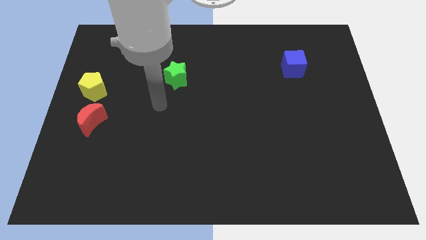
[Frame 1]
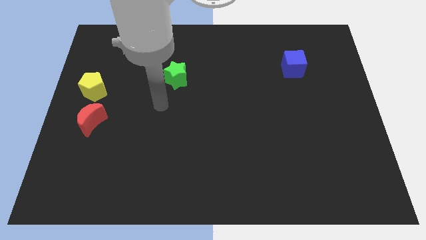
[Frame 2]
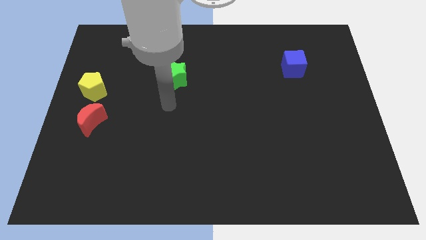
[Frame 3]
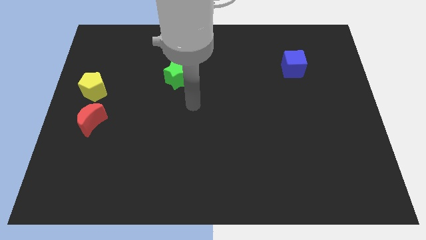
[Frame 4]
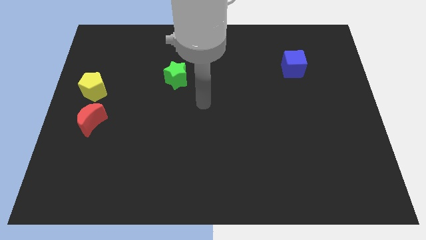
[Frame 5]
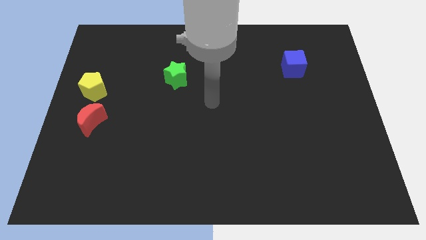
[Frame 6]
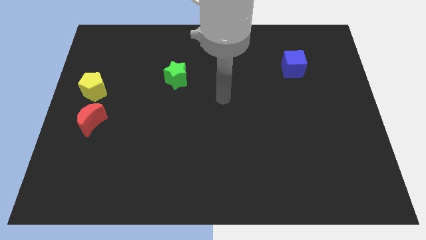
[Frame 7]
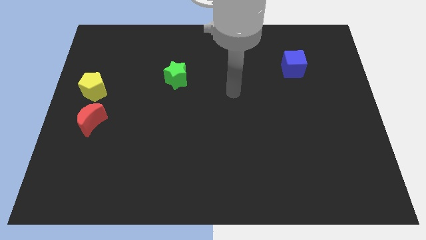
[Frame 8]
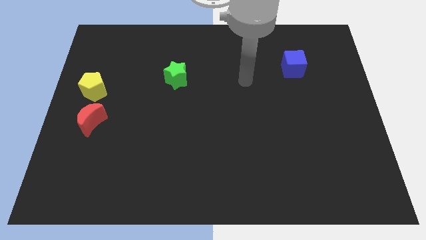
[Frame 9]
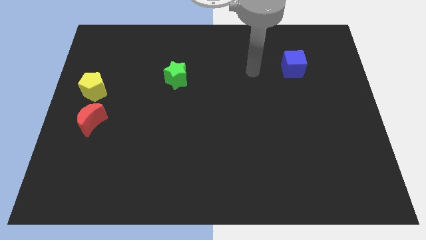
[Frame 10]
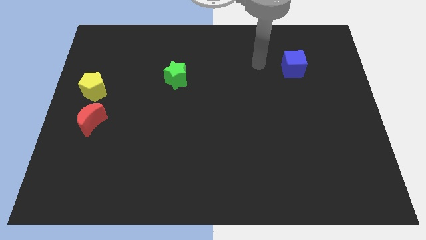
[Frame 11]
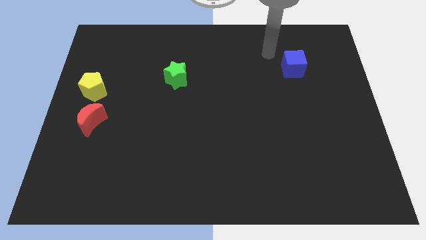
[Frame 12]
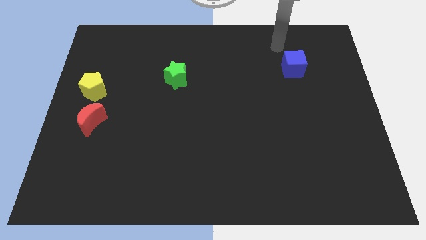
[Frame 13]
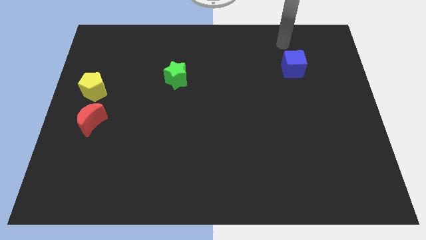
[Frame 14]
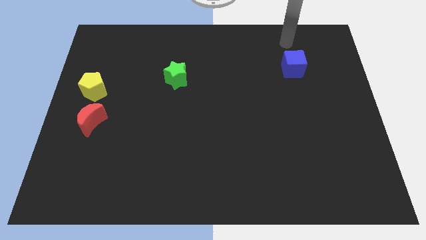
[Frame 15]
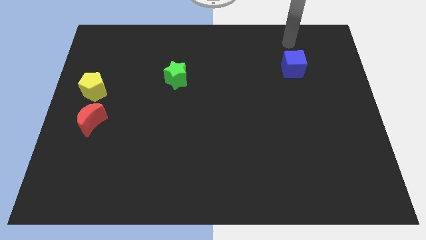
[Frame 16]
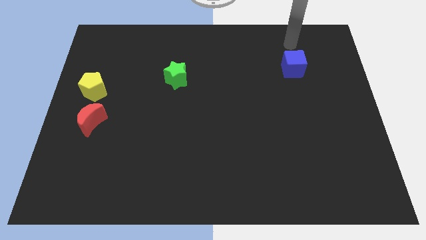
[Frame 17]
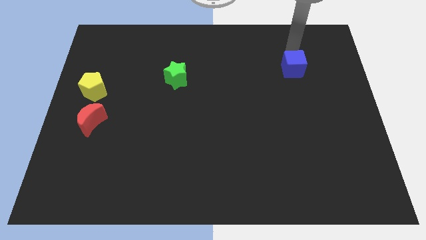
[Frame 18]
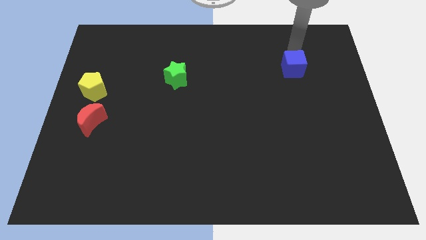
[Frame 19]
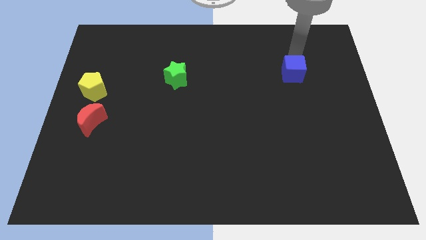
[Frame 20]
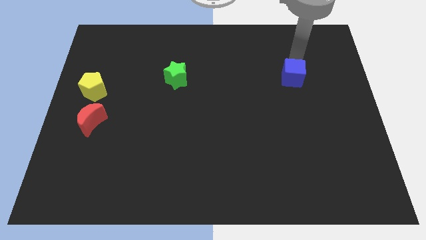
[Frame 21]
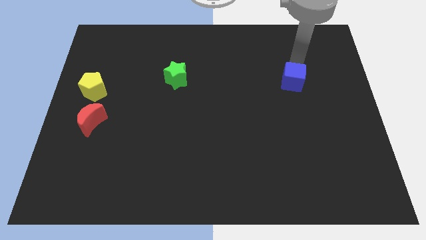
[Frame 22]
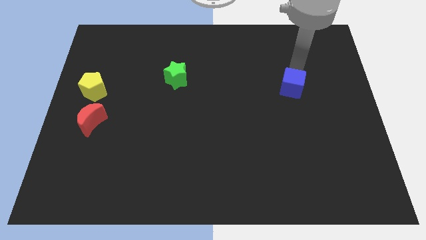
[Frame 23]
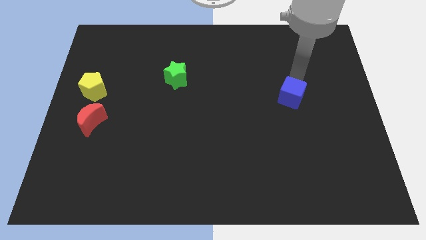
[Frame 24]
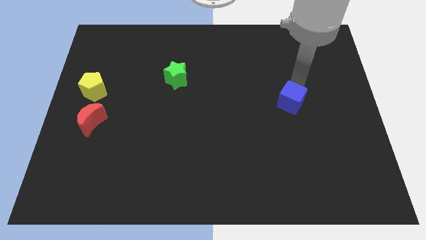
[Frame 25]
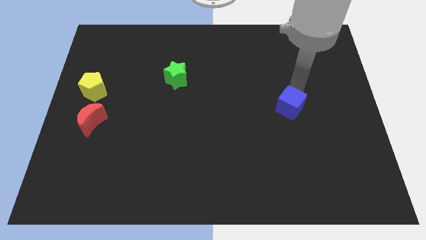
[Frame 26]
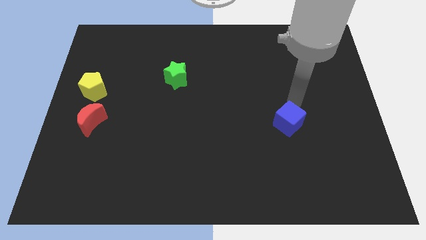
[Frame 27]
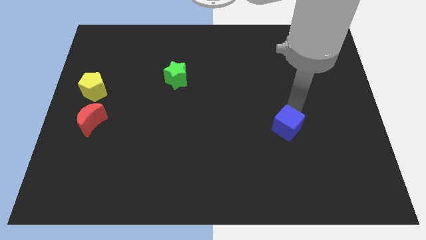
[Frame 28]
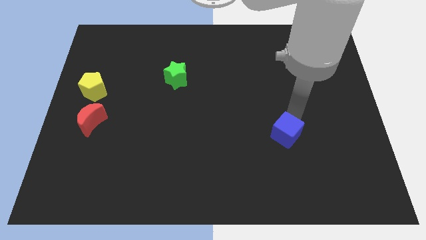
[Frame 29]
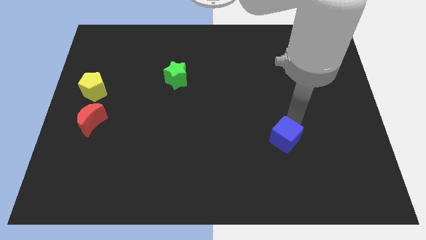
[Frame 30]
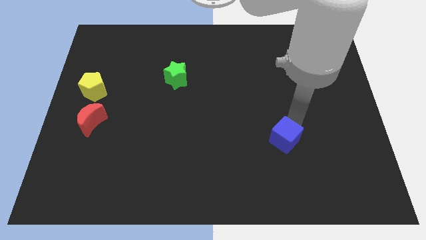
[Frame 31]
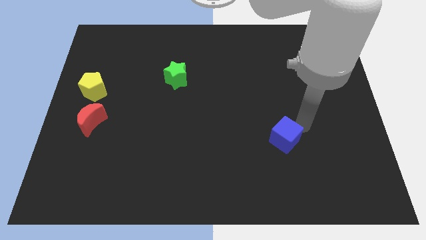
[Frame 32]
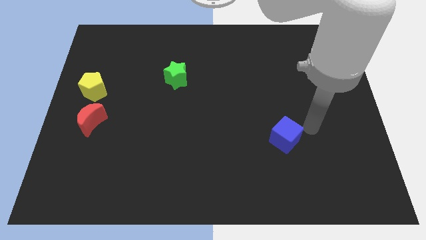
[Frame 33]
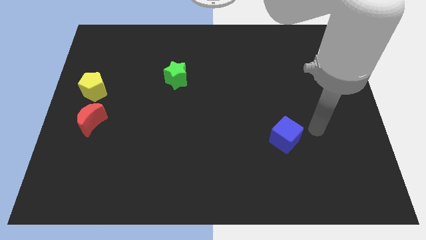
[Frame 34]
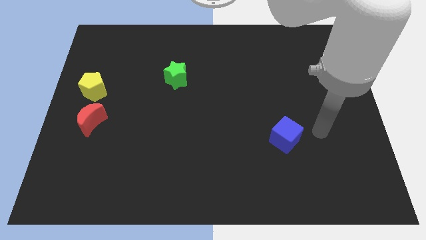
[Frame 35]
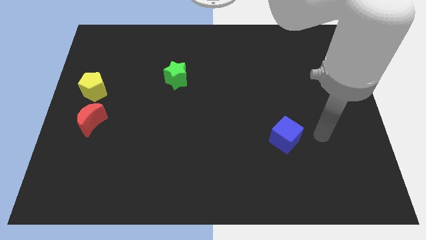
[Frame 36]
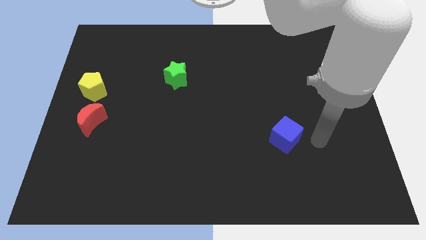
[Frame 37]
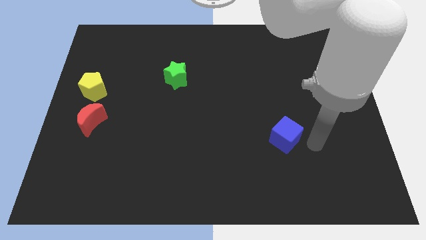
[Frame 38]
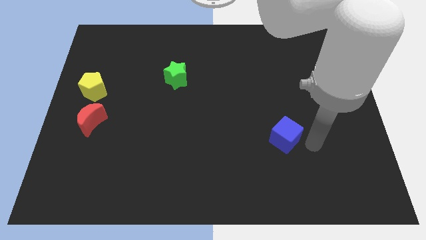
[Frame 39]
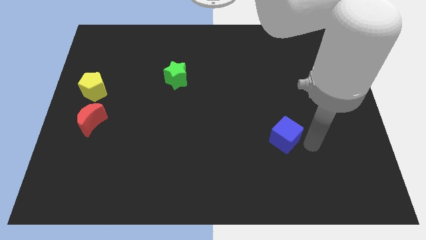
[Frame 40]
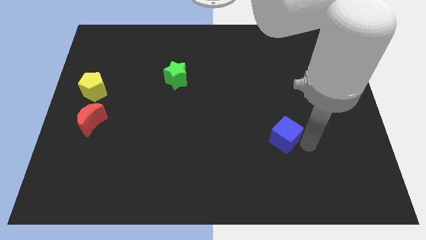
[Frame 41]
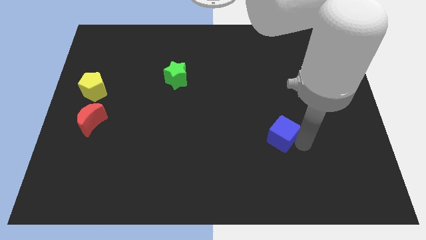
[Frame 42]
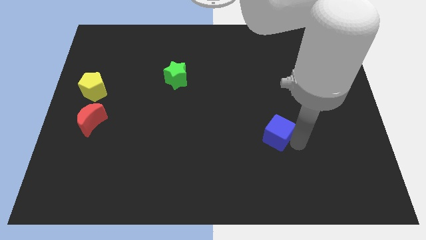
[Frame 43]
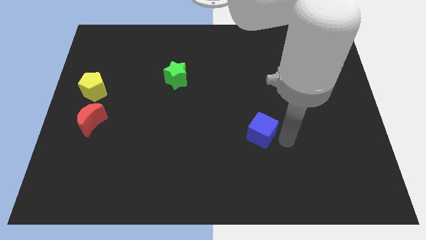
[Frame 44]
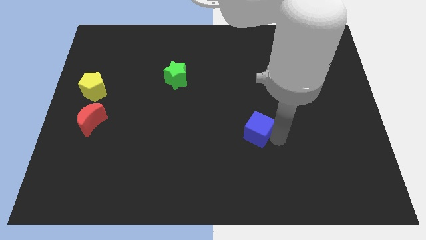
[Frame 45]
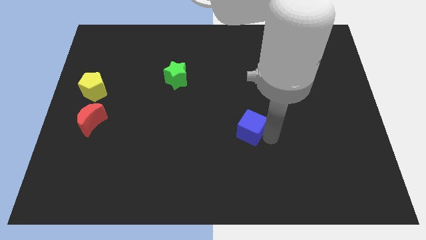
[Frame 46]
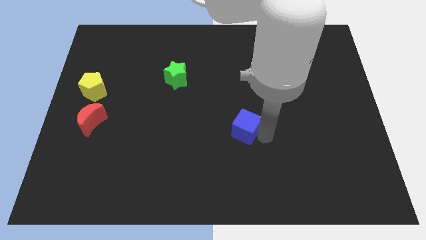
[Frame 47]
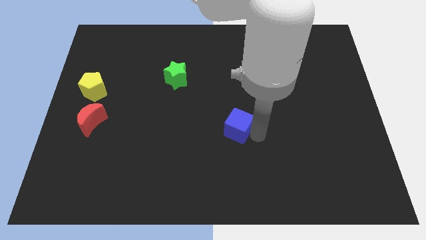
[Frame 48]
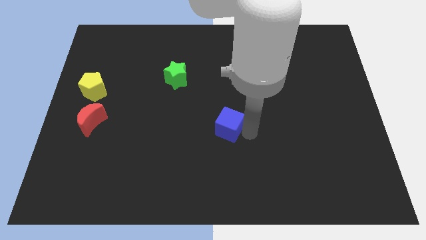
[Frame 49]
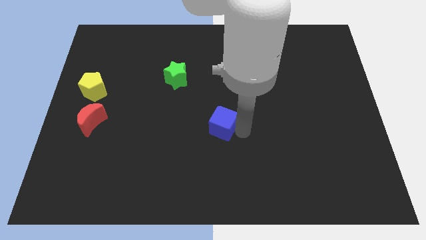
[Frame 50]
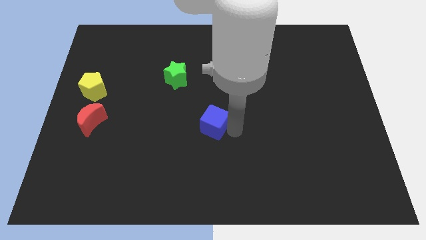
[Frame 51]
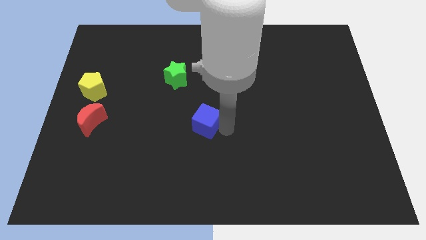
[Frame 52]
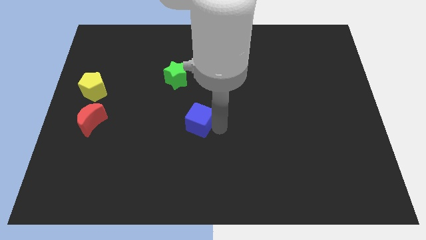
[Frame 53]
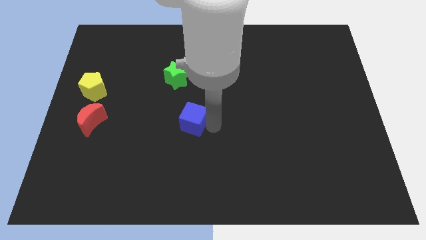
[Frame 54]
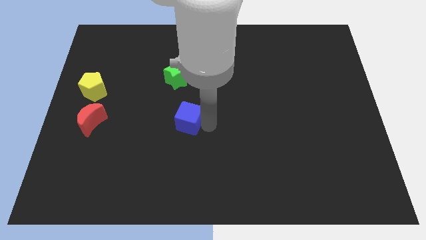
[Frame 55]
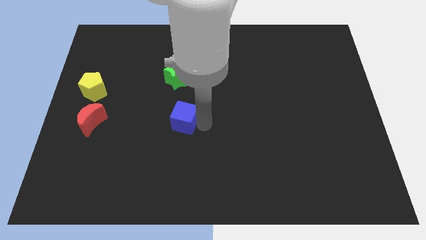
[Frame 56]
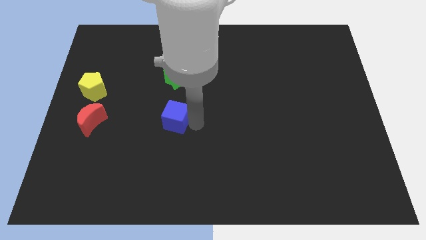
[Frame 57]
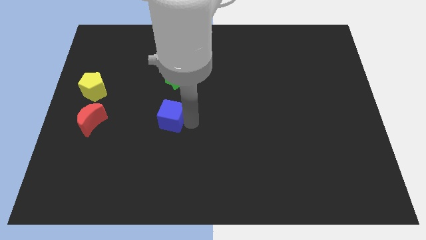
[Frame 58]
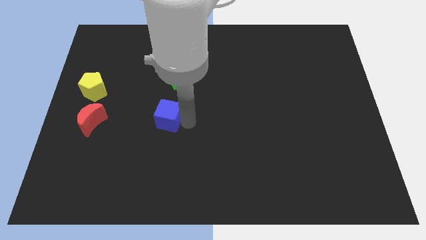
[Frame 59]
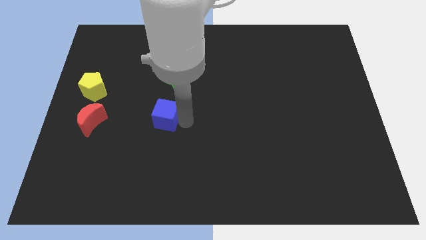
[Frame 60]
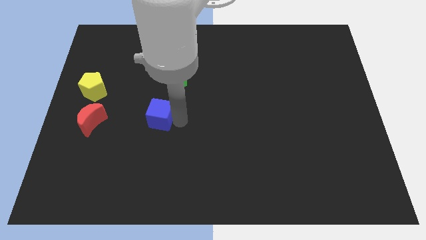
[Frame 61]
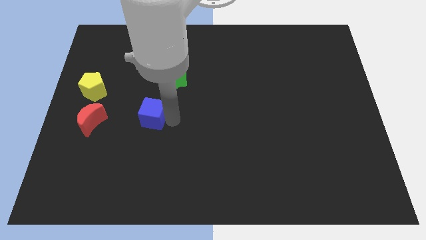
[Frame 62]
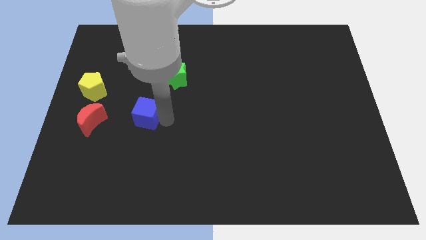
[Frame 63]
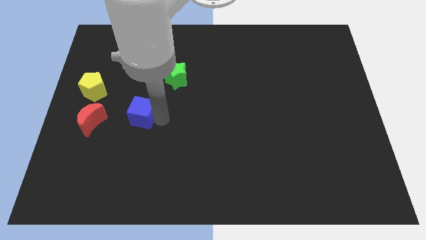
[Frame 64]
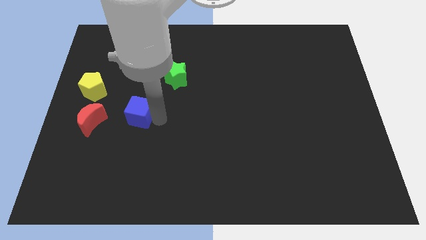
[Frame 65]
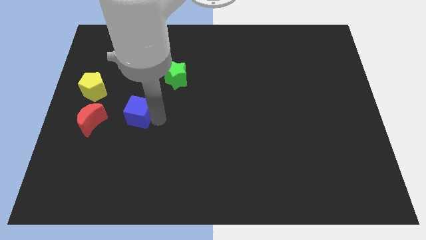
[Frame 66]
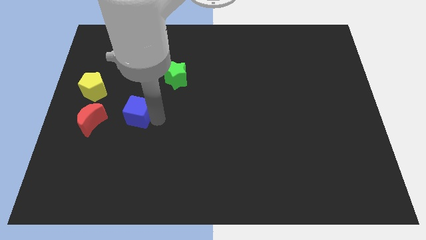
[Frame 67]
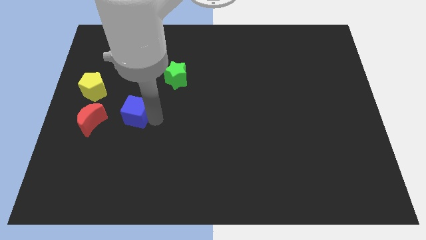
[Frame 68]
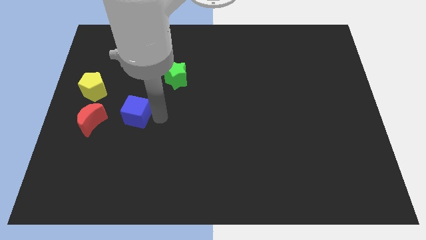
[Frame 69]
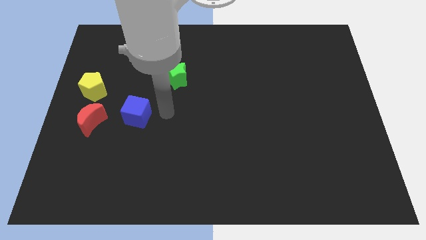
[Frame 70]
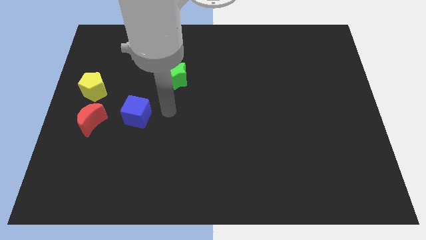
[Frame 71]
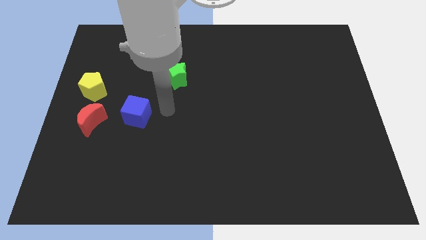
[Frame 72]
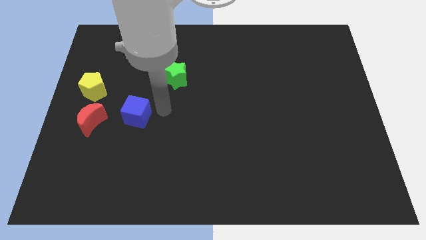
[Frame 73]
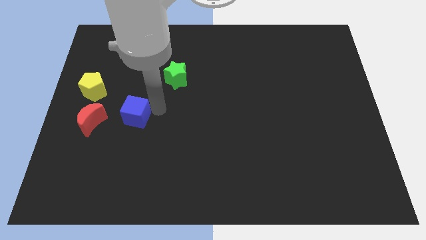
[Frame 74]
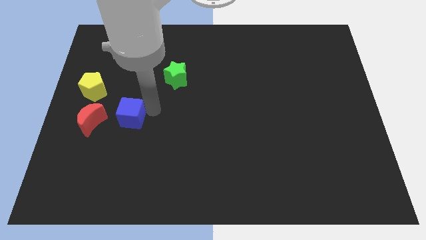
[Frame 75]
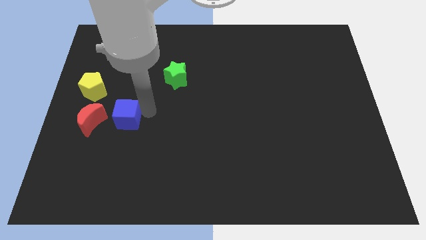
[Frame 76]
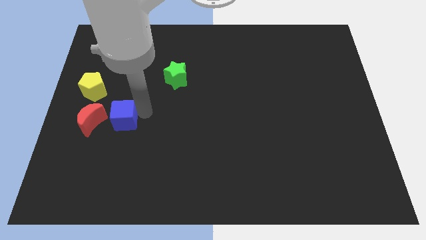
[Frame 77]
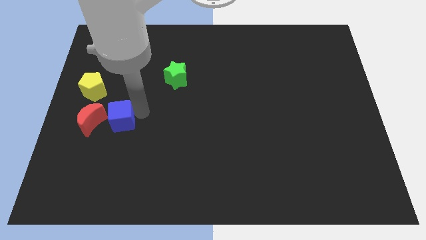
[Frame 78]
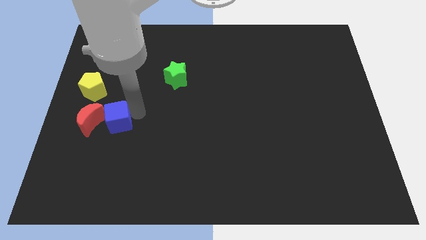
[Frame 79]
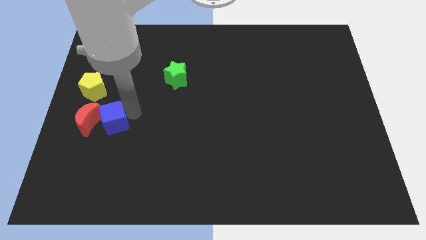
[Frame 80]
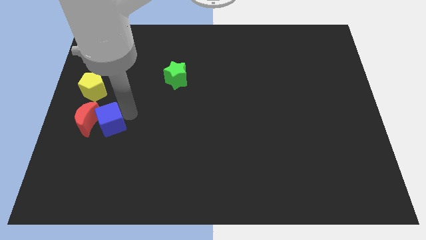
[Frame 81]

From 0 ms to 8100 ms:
slide the blue cube to the moon
